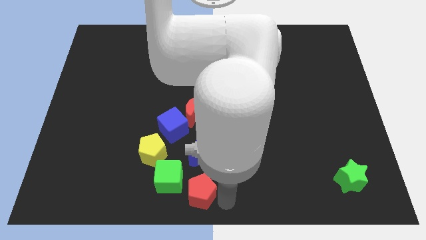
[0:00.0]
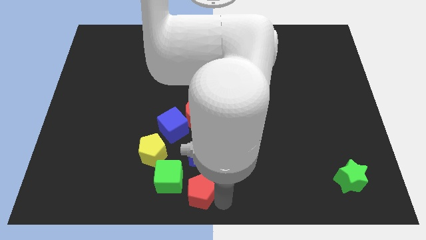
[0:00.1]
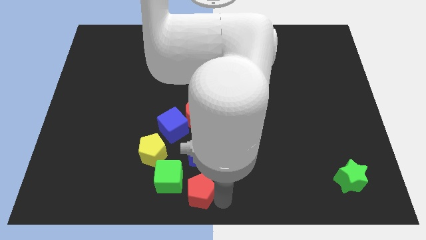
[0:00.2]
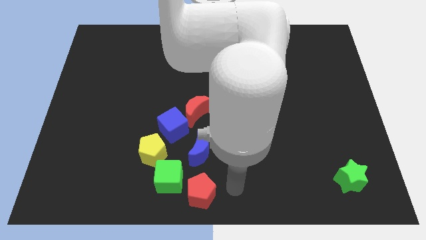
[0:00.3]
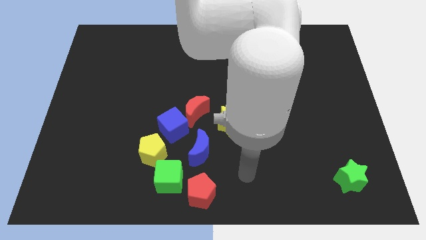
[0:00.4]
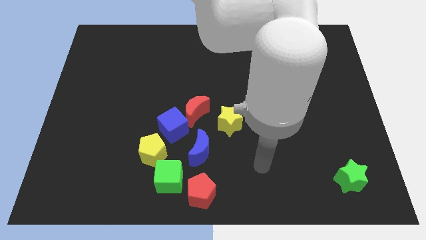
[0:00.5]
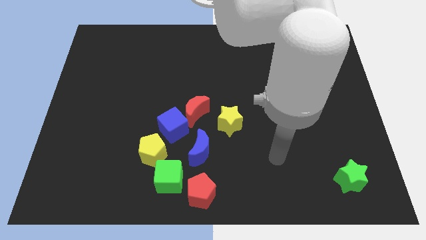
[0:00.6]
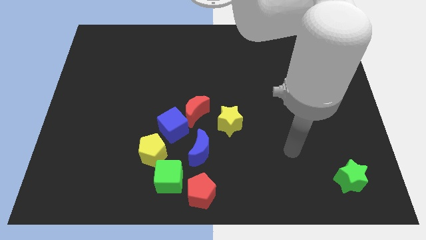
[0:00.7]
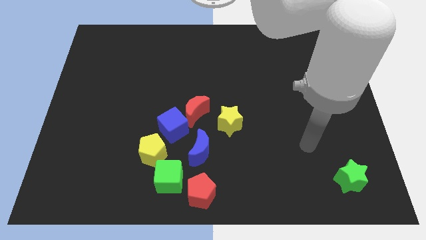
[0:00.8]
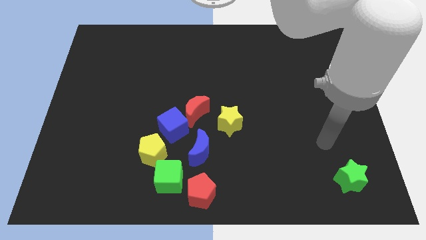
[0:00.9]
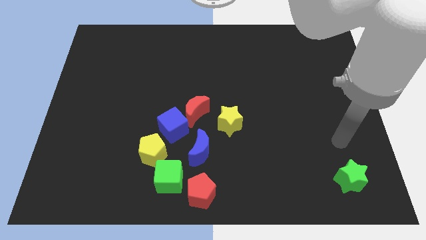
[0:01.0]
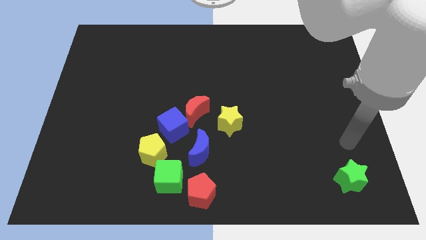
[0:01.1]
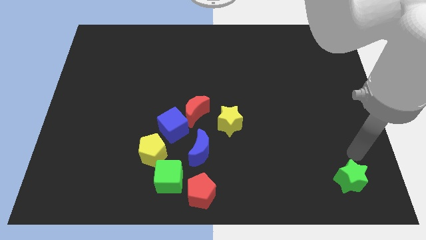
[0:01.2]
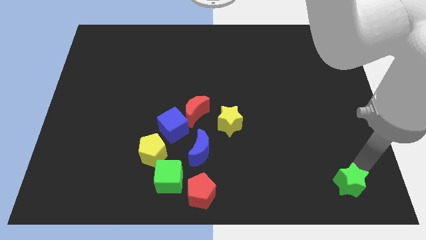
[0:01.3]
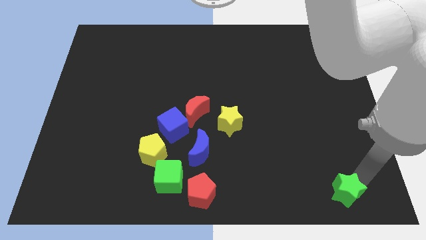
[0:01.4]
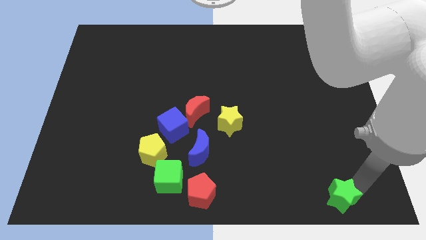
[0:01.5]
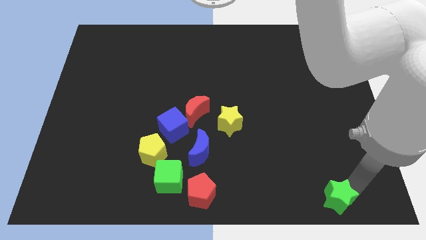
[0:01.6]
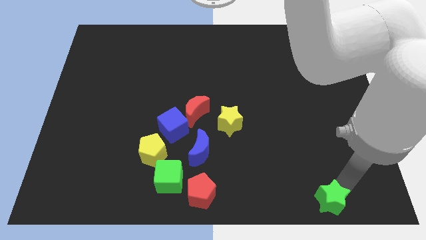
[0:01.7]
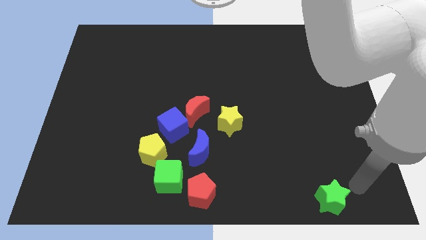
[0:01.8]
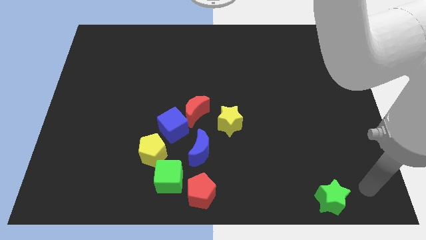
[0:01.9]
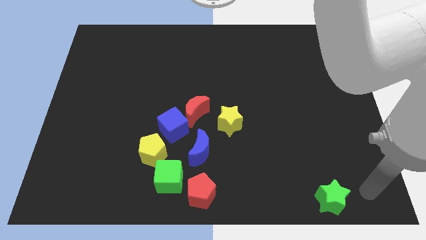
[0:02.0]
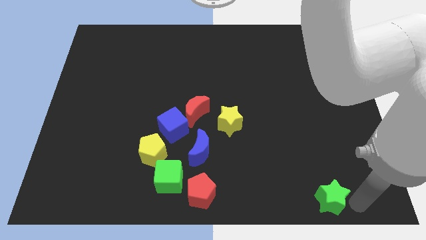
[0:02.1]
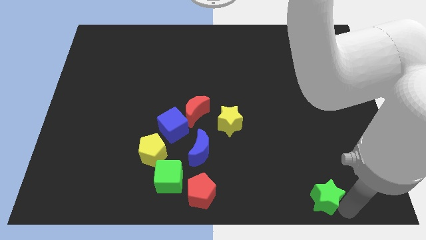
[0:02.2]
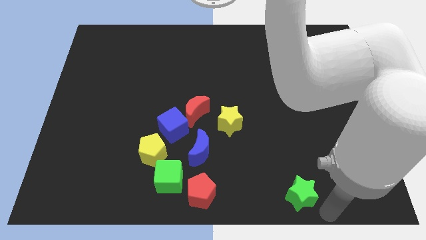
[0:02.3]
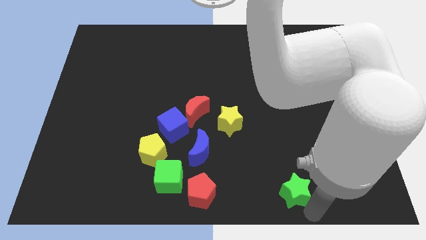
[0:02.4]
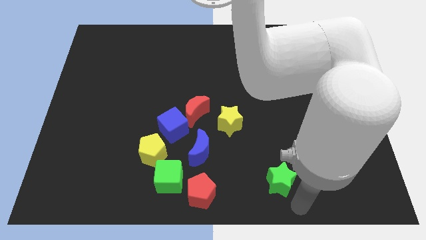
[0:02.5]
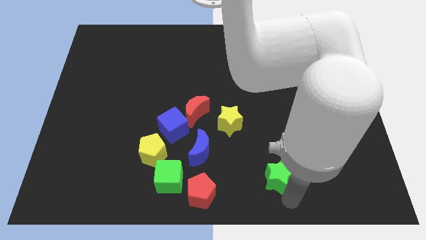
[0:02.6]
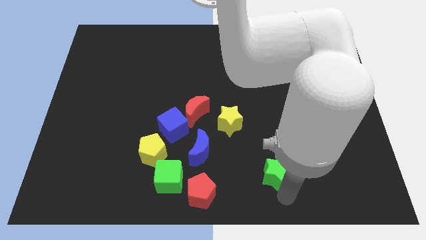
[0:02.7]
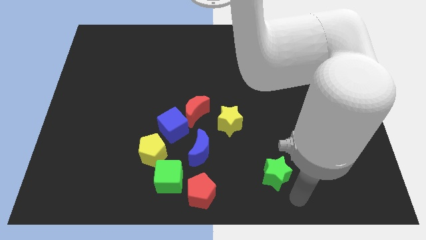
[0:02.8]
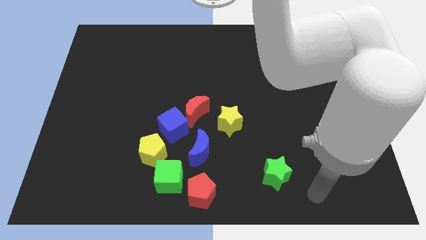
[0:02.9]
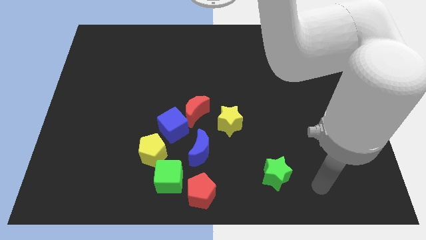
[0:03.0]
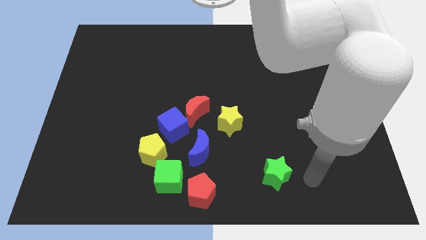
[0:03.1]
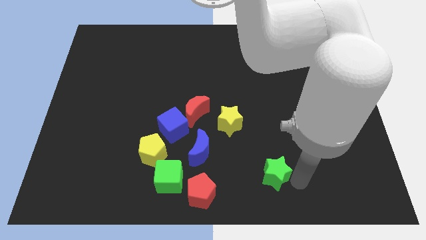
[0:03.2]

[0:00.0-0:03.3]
push the green star to the left side of the board

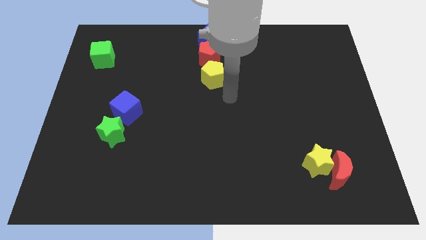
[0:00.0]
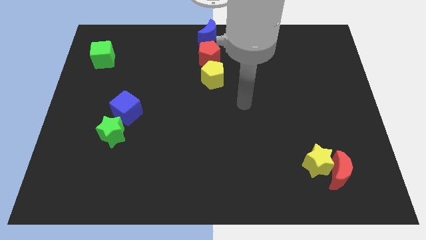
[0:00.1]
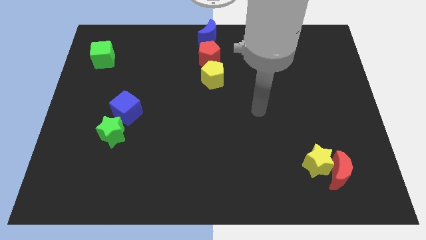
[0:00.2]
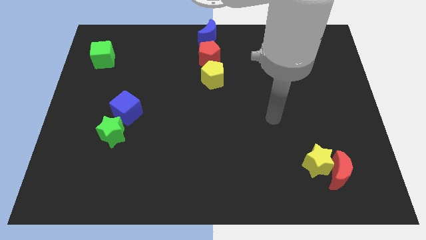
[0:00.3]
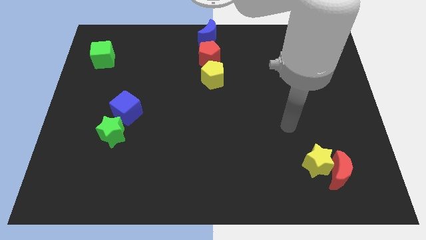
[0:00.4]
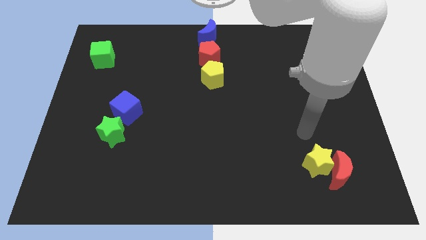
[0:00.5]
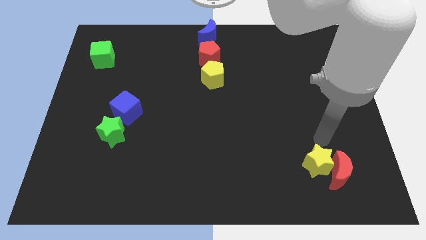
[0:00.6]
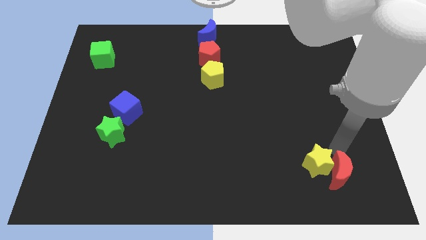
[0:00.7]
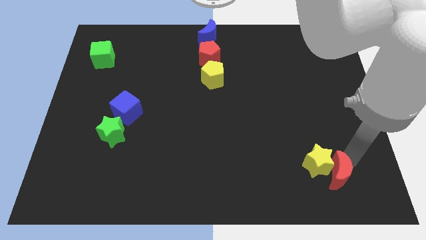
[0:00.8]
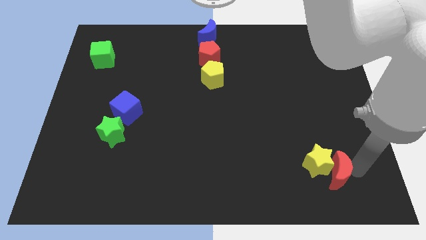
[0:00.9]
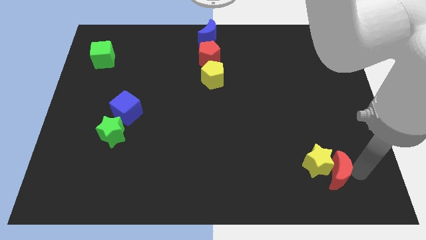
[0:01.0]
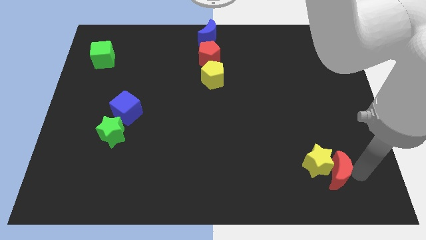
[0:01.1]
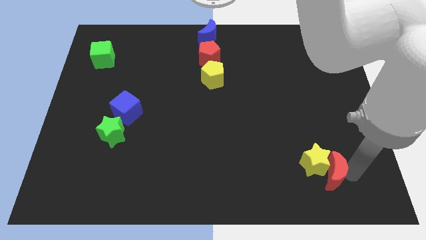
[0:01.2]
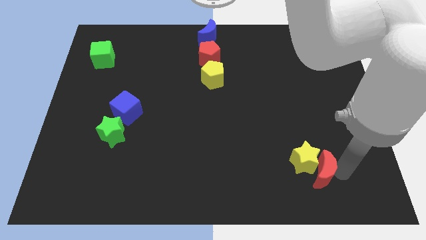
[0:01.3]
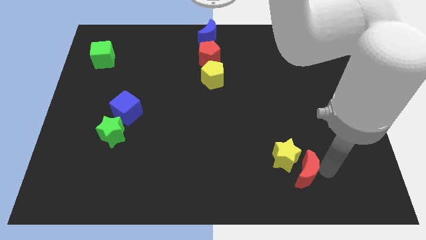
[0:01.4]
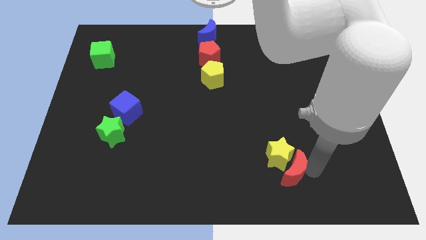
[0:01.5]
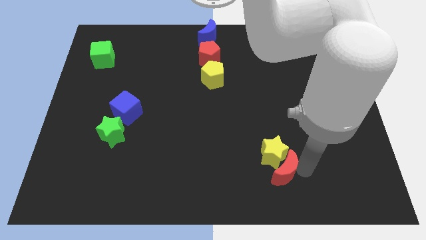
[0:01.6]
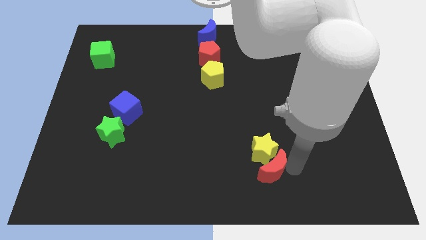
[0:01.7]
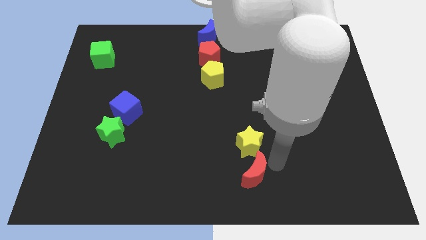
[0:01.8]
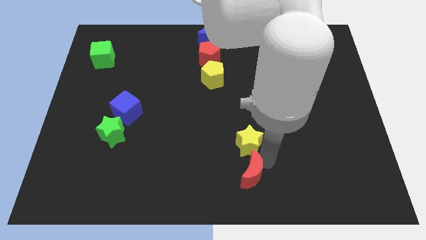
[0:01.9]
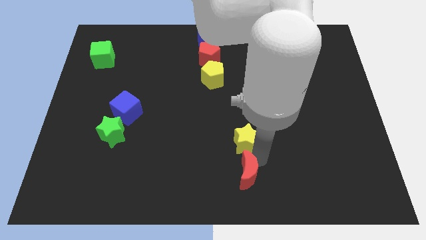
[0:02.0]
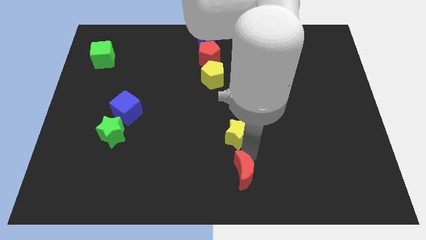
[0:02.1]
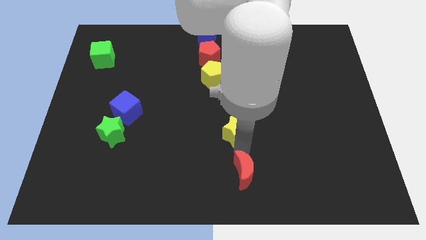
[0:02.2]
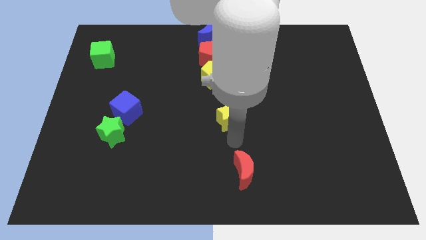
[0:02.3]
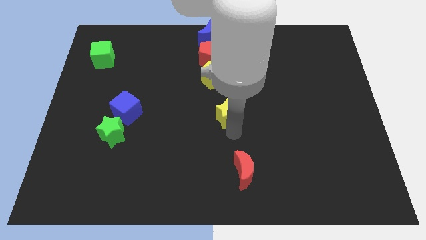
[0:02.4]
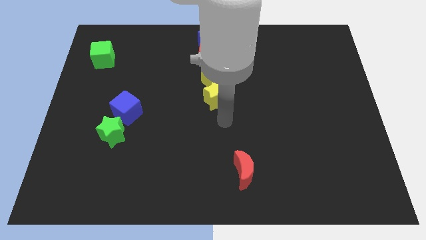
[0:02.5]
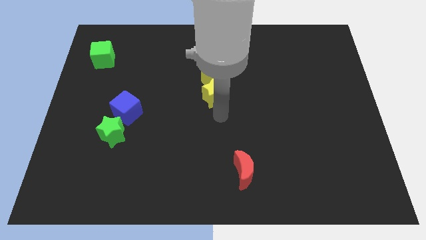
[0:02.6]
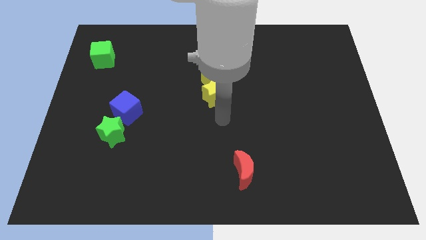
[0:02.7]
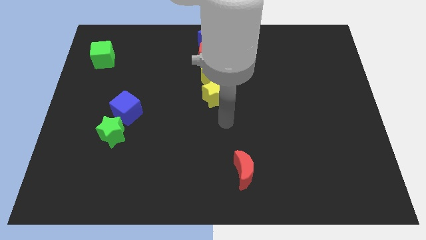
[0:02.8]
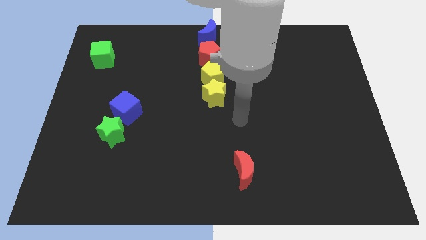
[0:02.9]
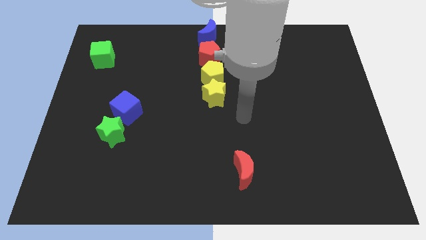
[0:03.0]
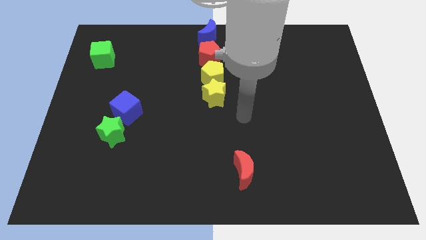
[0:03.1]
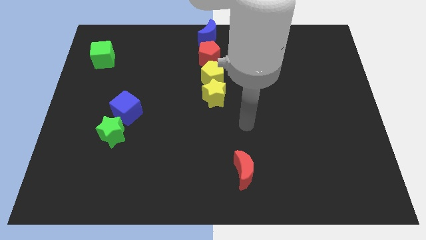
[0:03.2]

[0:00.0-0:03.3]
move the yellow star to the bottom of the yellow pentagon

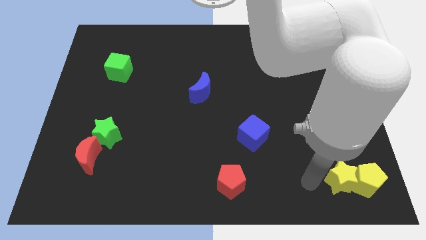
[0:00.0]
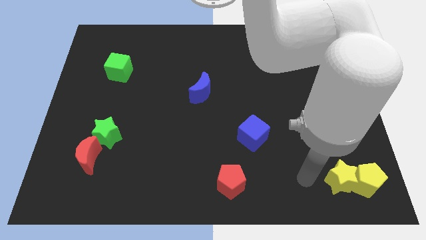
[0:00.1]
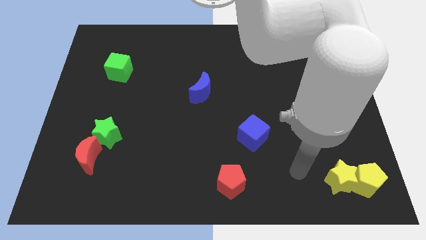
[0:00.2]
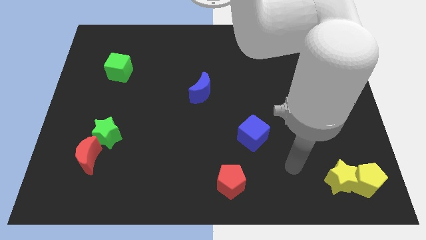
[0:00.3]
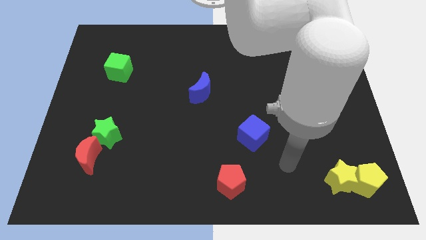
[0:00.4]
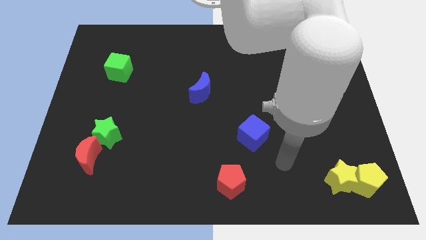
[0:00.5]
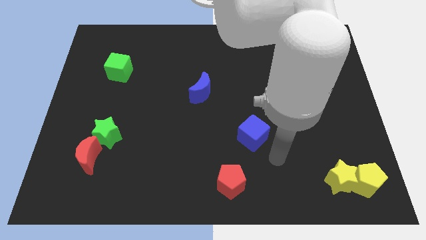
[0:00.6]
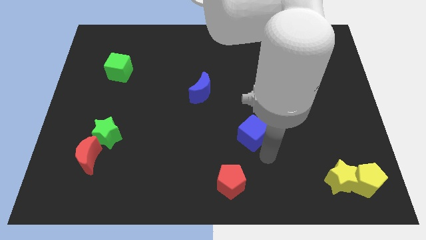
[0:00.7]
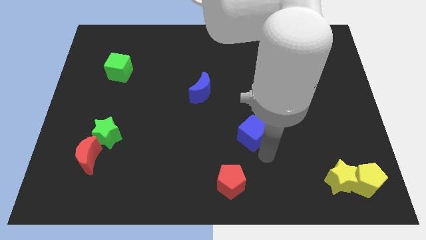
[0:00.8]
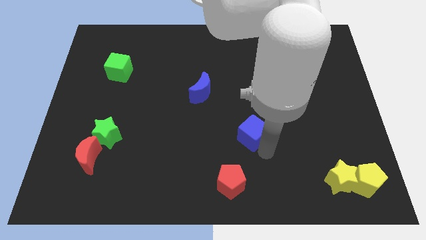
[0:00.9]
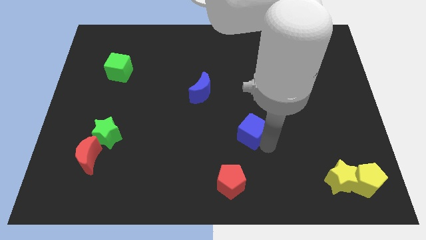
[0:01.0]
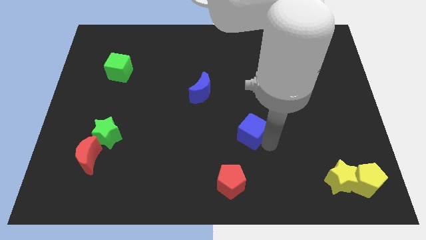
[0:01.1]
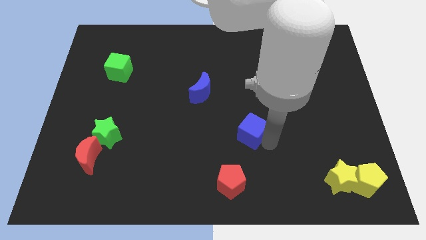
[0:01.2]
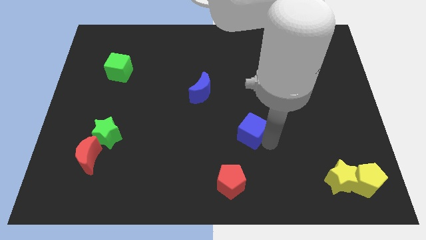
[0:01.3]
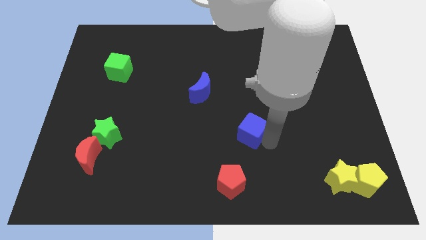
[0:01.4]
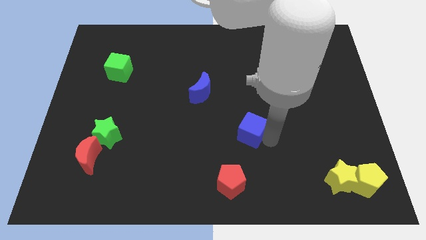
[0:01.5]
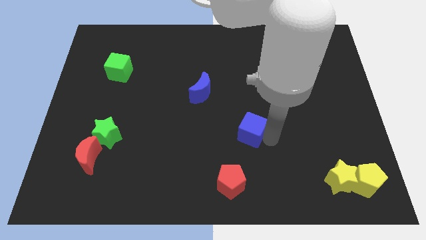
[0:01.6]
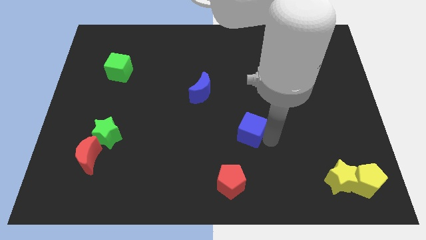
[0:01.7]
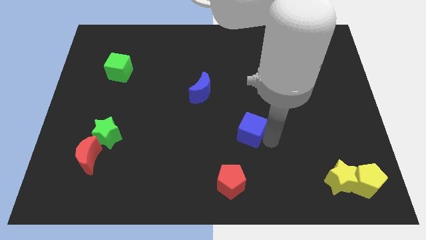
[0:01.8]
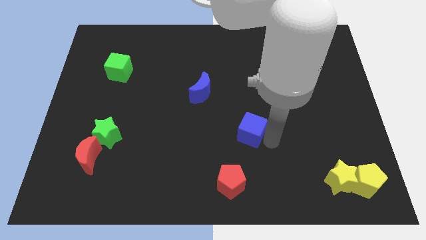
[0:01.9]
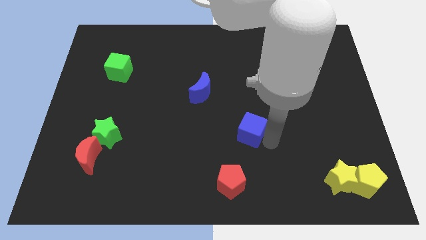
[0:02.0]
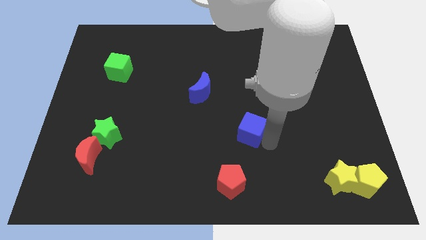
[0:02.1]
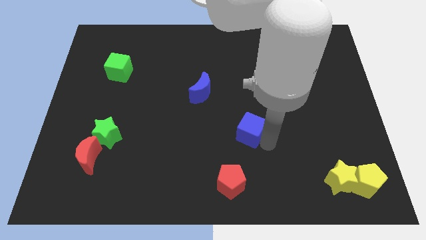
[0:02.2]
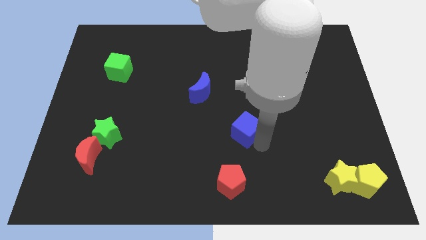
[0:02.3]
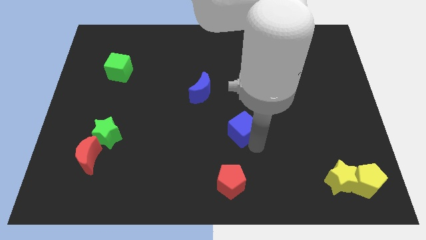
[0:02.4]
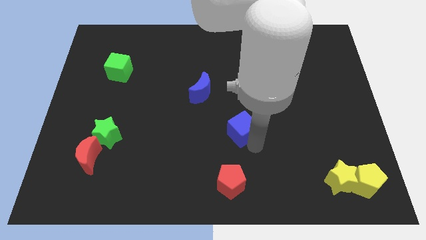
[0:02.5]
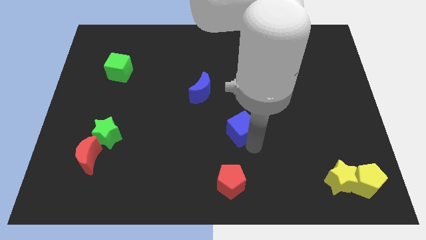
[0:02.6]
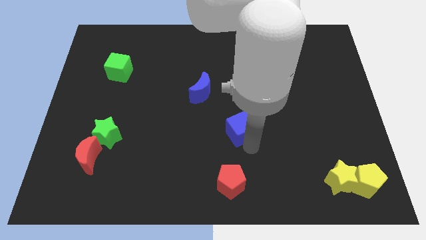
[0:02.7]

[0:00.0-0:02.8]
move the arm to the blue cube
